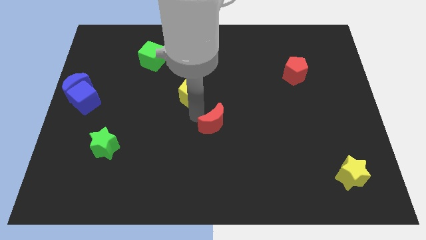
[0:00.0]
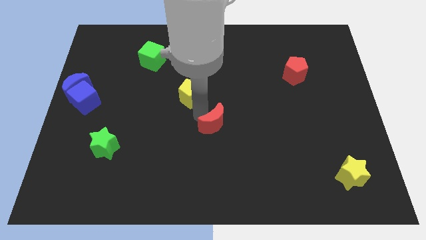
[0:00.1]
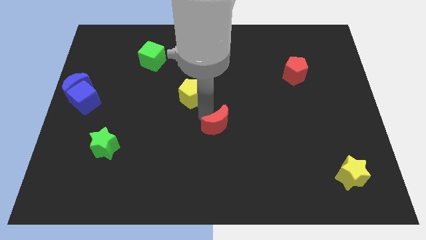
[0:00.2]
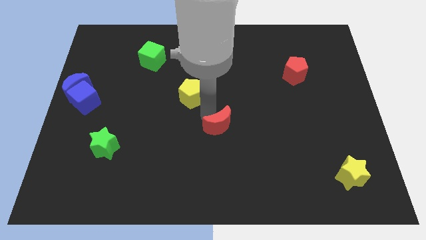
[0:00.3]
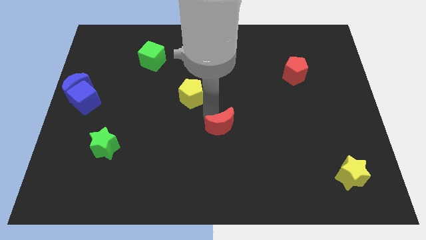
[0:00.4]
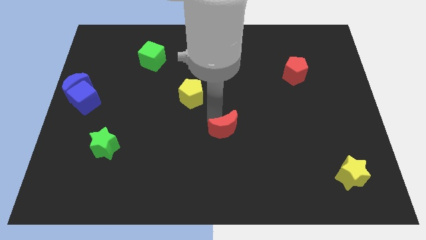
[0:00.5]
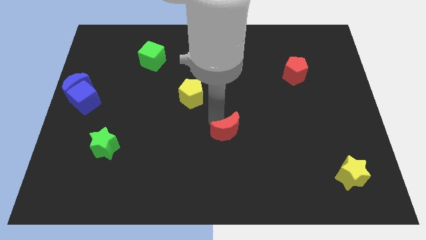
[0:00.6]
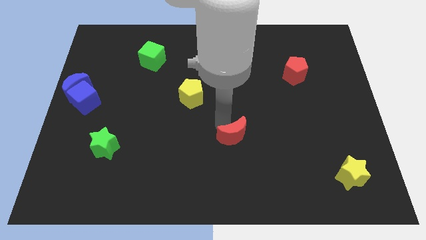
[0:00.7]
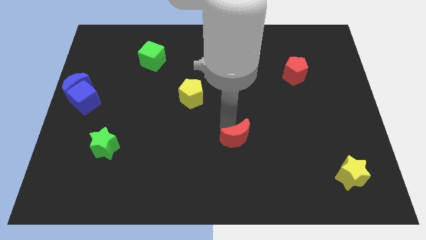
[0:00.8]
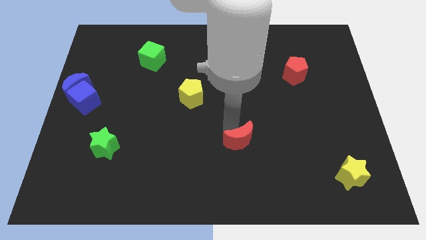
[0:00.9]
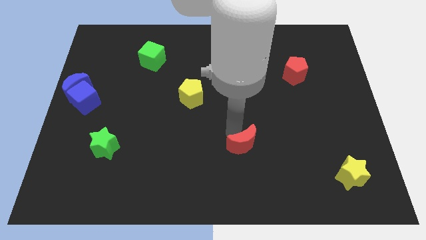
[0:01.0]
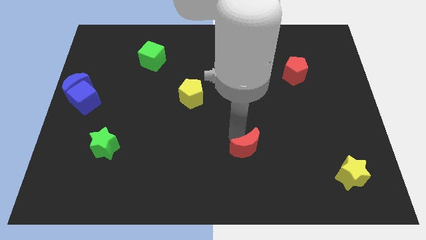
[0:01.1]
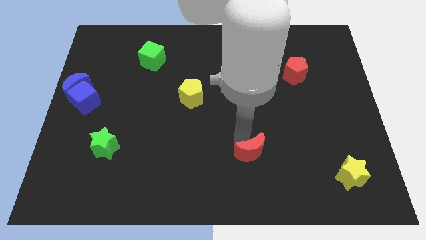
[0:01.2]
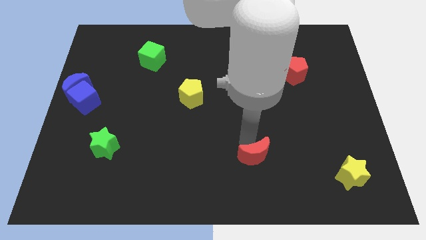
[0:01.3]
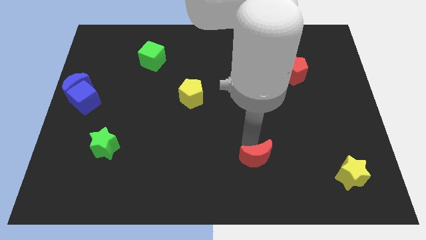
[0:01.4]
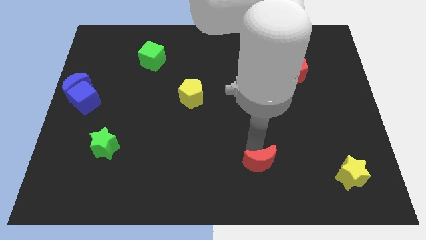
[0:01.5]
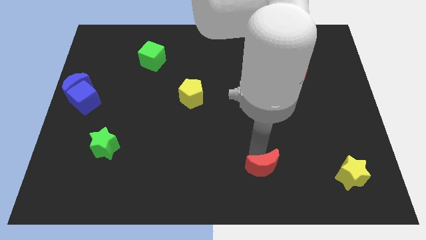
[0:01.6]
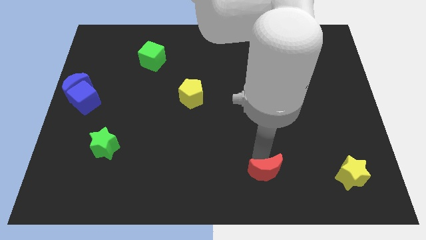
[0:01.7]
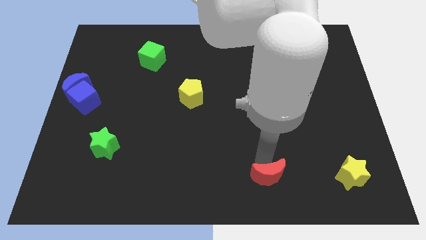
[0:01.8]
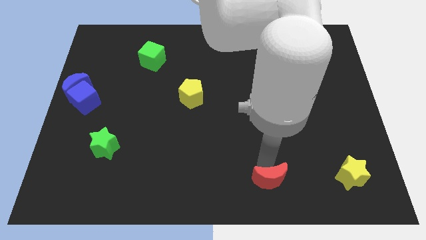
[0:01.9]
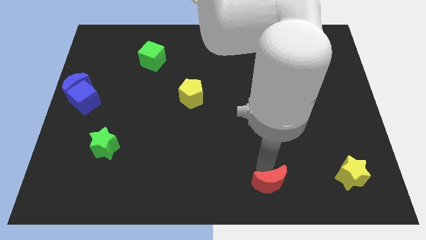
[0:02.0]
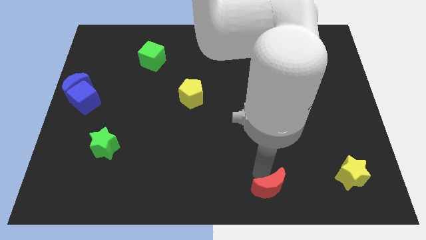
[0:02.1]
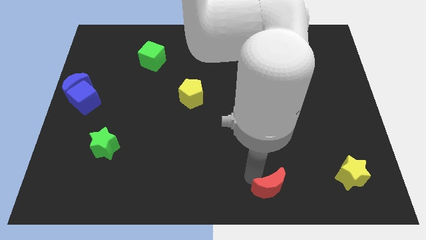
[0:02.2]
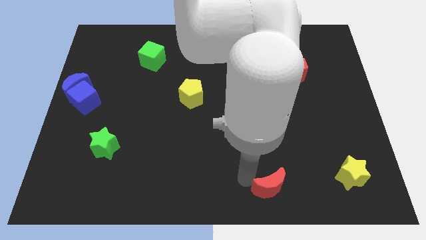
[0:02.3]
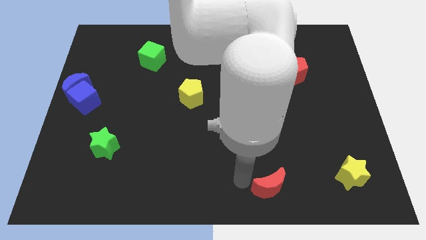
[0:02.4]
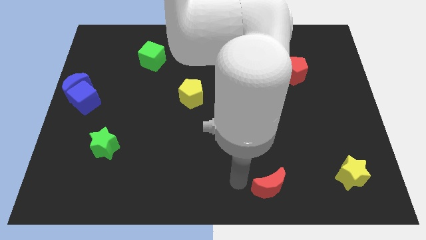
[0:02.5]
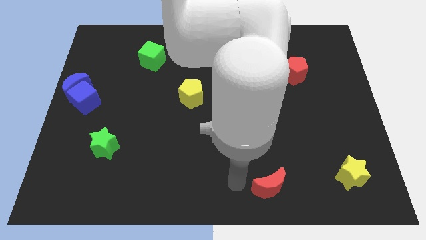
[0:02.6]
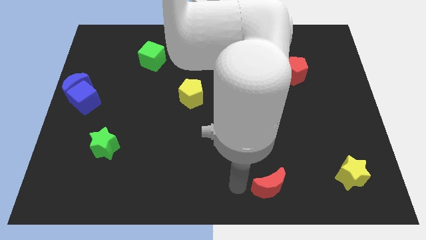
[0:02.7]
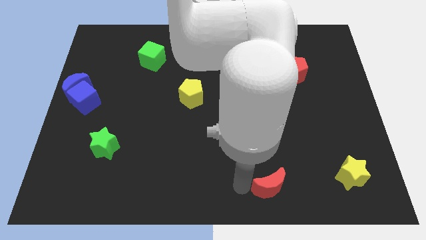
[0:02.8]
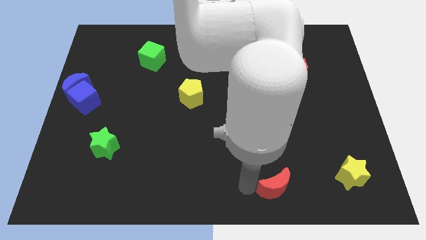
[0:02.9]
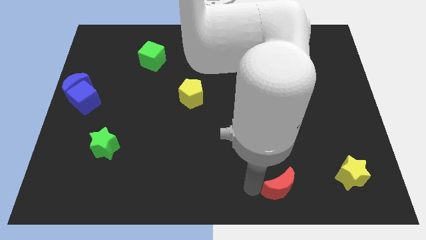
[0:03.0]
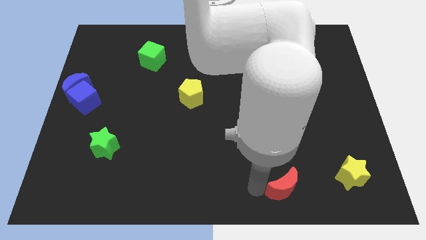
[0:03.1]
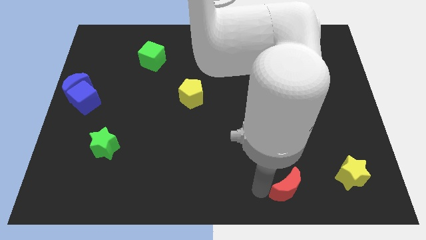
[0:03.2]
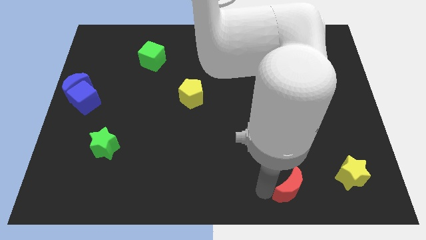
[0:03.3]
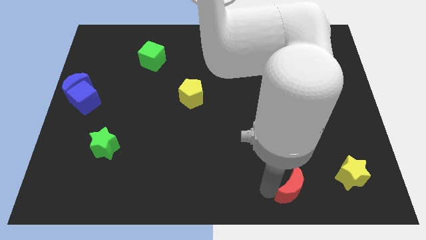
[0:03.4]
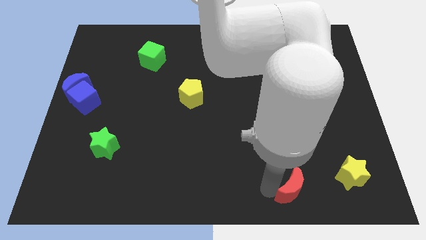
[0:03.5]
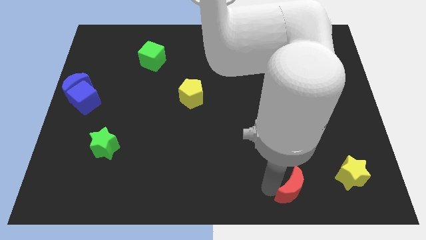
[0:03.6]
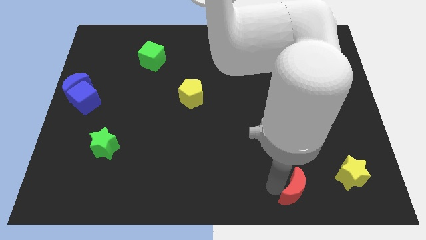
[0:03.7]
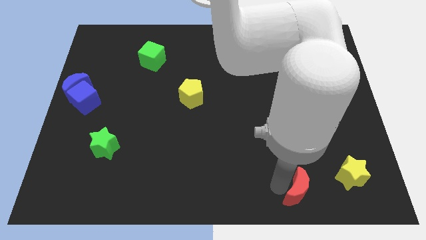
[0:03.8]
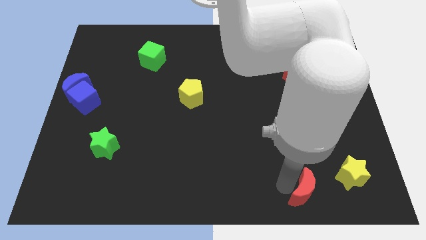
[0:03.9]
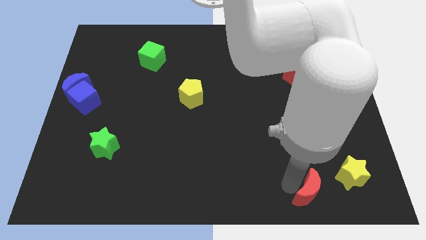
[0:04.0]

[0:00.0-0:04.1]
move the red moon towards the bottom right

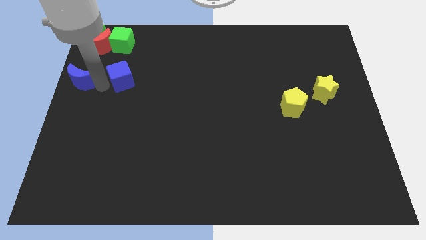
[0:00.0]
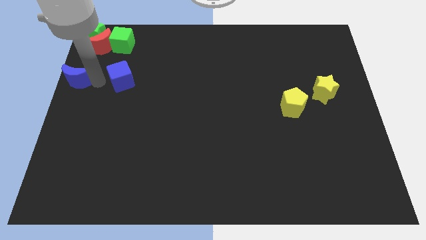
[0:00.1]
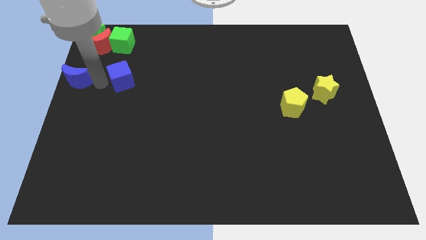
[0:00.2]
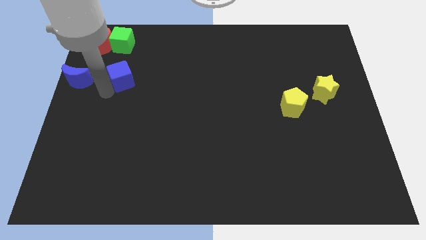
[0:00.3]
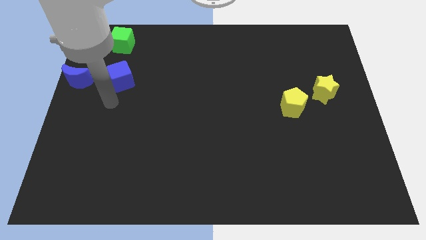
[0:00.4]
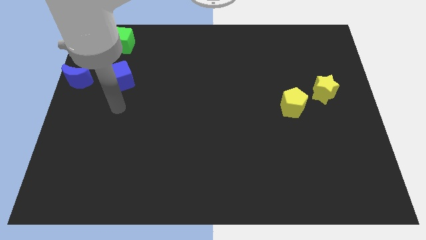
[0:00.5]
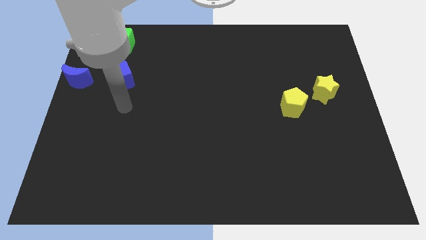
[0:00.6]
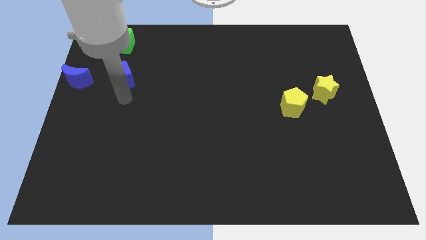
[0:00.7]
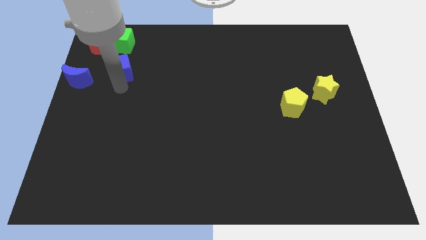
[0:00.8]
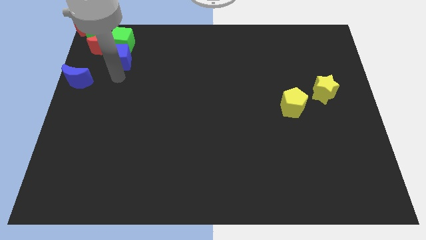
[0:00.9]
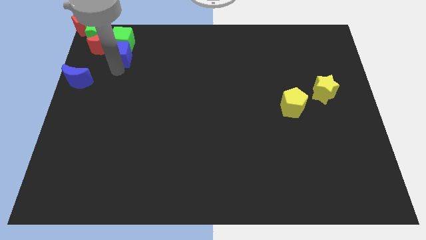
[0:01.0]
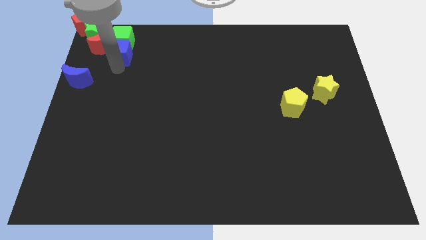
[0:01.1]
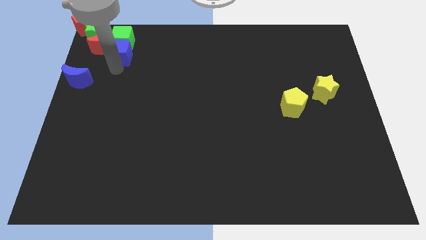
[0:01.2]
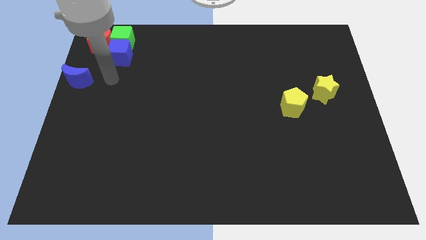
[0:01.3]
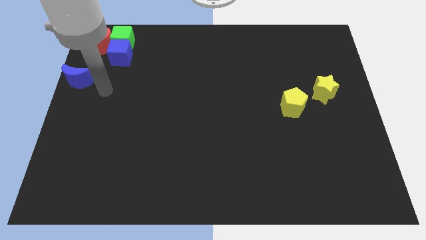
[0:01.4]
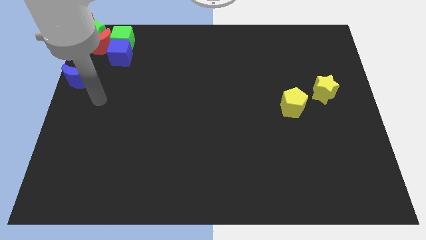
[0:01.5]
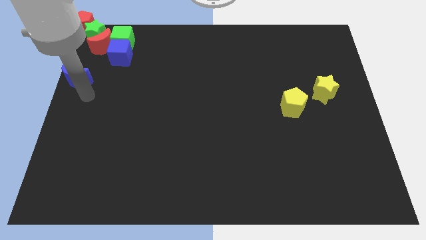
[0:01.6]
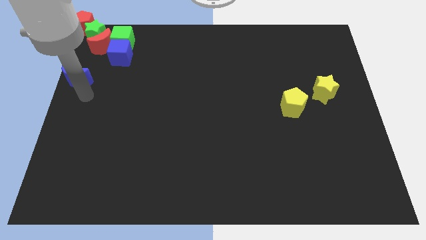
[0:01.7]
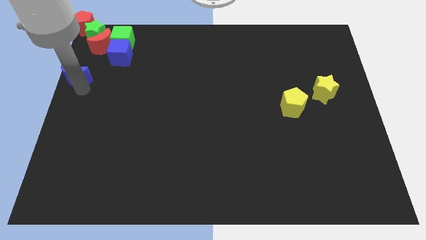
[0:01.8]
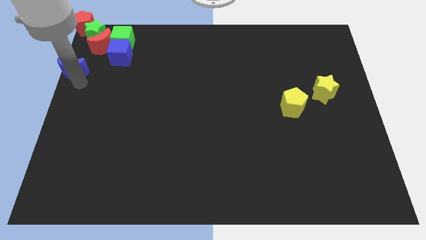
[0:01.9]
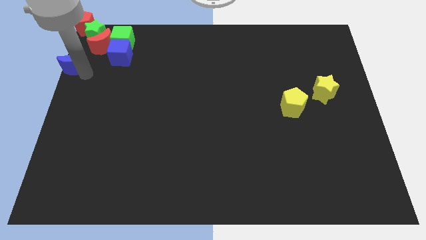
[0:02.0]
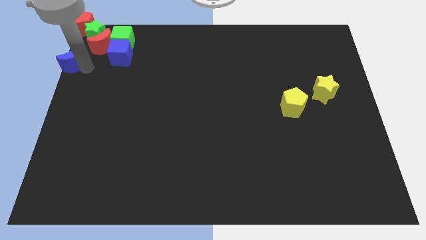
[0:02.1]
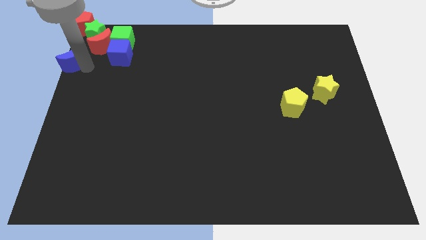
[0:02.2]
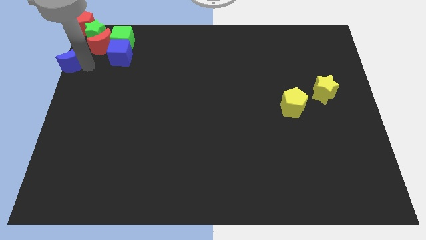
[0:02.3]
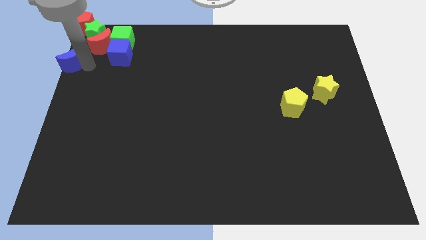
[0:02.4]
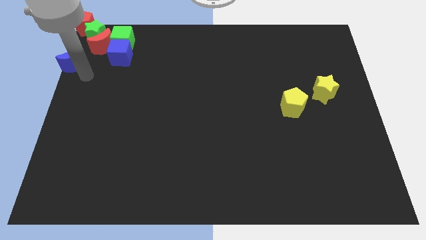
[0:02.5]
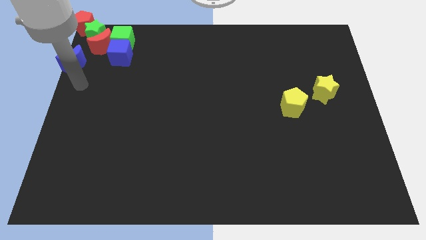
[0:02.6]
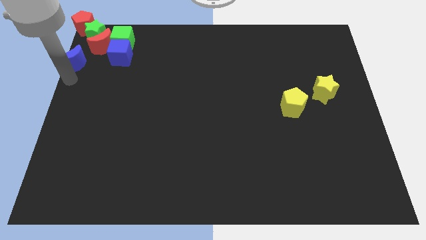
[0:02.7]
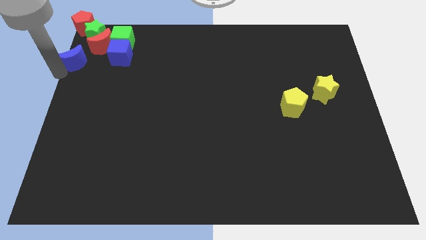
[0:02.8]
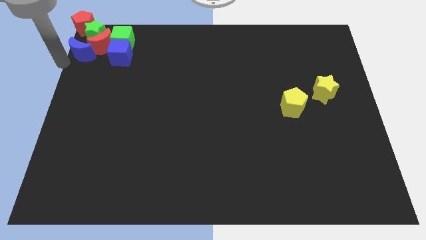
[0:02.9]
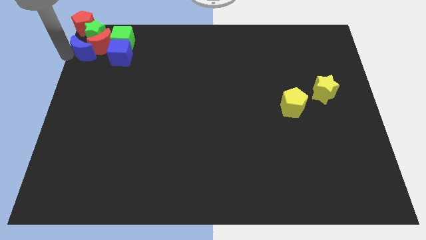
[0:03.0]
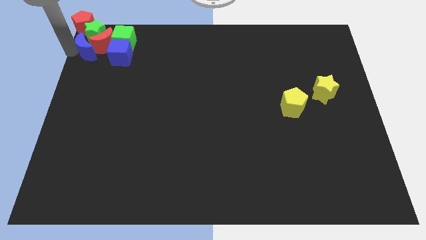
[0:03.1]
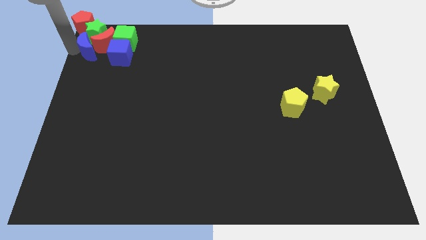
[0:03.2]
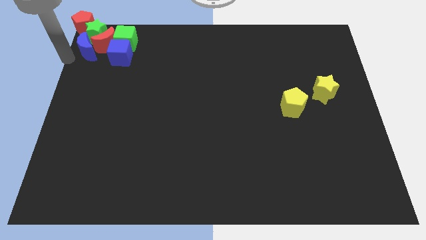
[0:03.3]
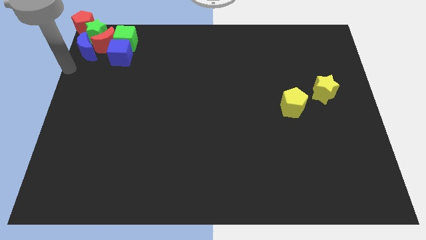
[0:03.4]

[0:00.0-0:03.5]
push blue blocks in to group of red and green blocks

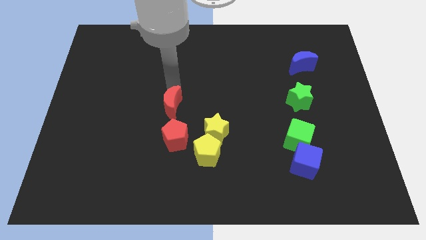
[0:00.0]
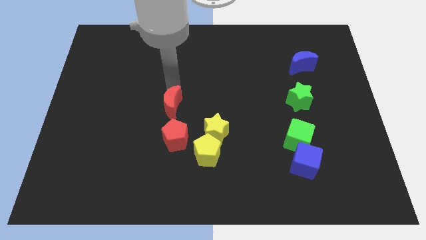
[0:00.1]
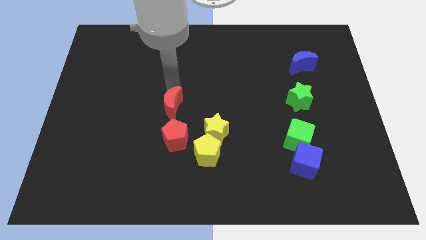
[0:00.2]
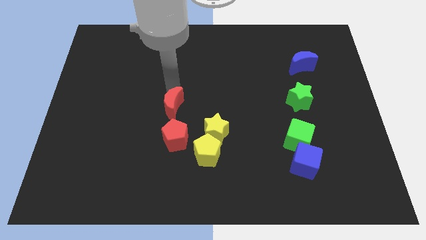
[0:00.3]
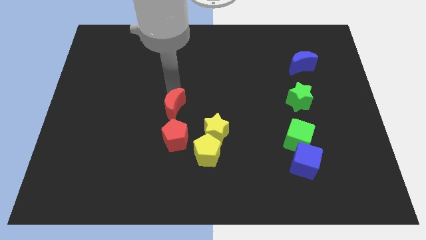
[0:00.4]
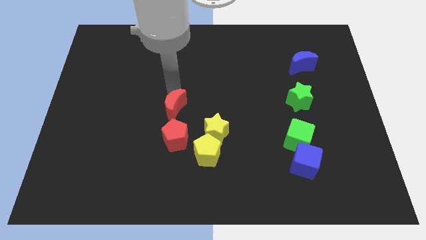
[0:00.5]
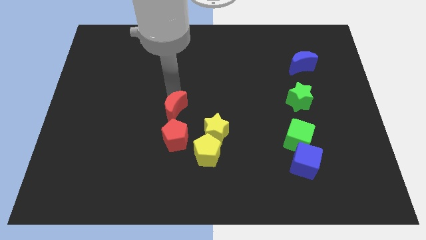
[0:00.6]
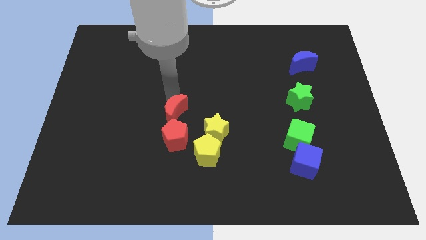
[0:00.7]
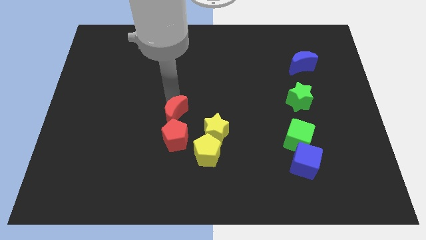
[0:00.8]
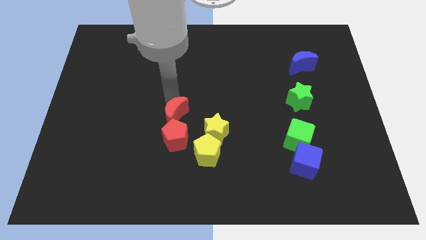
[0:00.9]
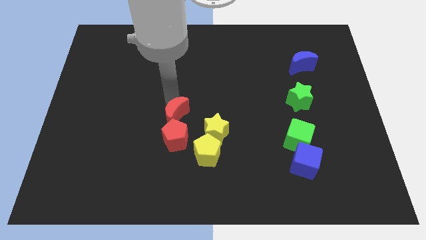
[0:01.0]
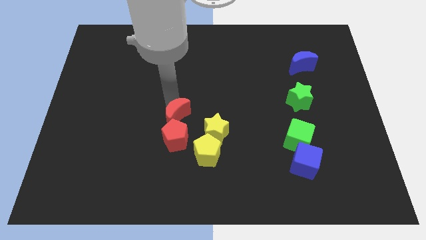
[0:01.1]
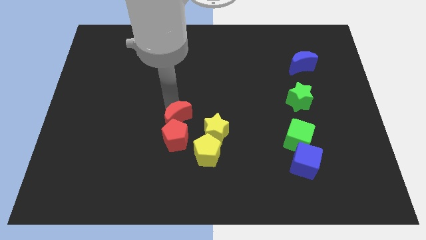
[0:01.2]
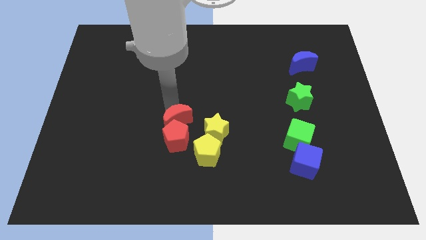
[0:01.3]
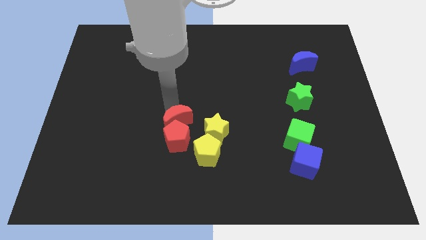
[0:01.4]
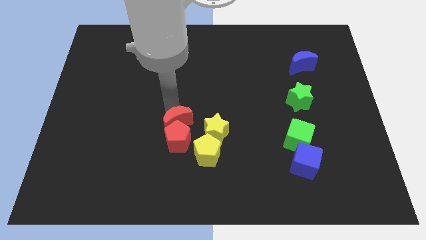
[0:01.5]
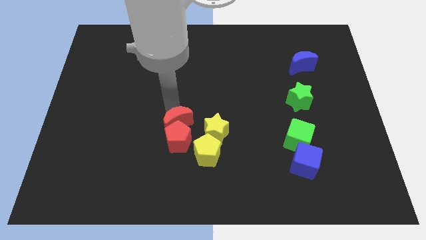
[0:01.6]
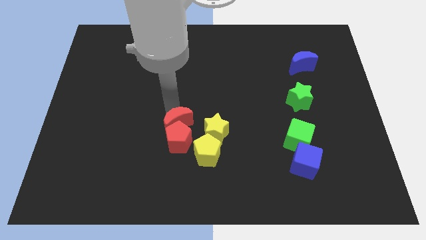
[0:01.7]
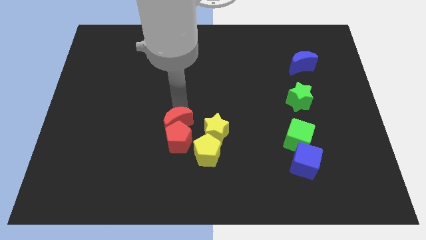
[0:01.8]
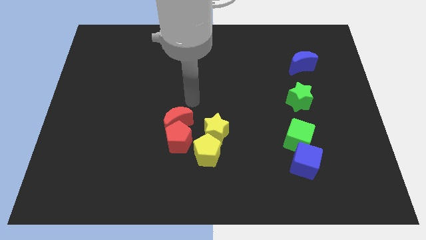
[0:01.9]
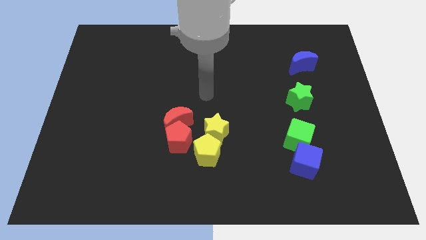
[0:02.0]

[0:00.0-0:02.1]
push the red crescent into red pentagon
